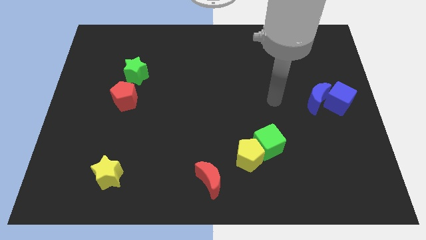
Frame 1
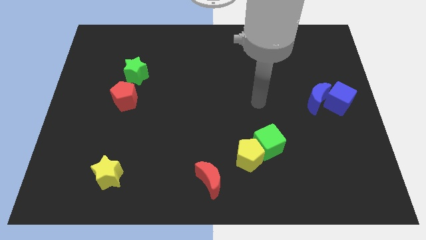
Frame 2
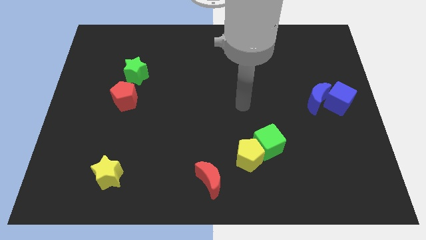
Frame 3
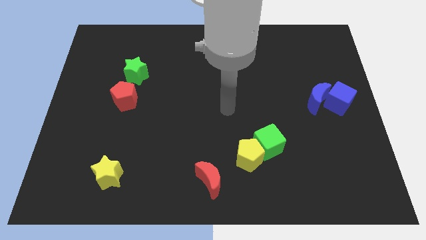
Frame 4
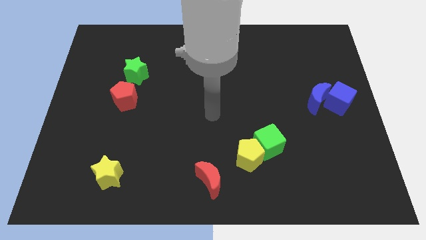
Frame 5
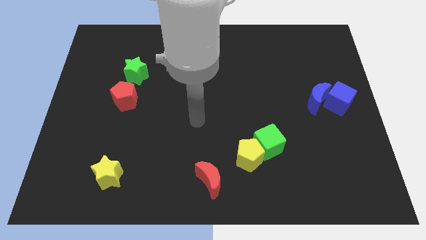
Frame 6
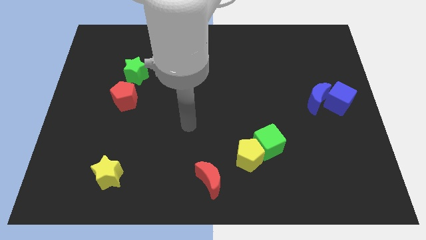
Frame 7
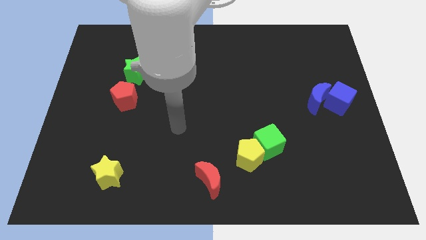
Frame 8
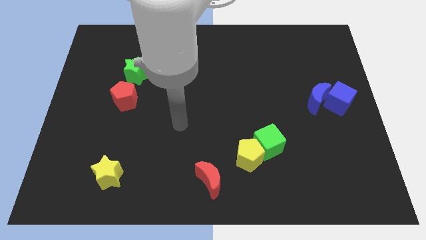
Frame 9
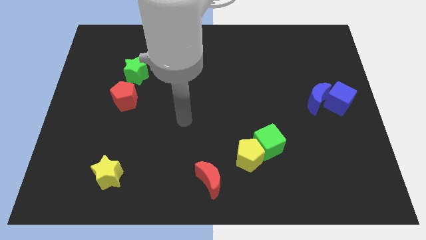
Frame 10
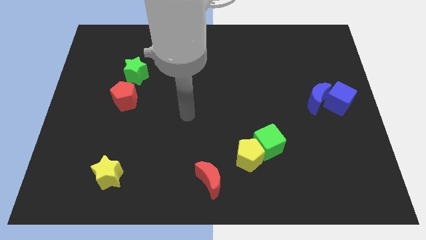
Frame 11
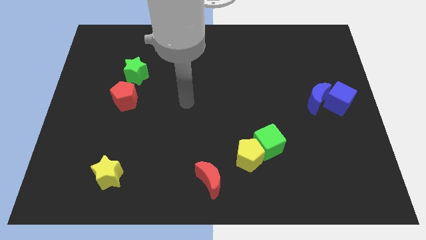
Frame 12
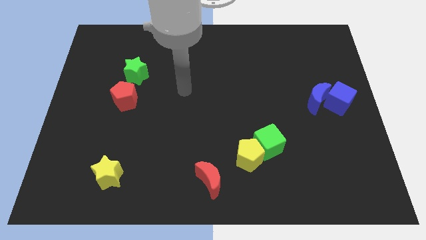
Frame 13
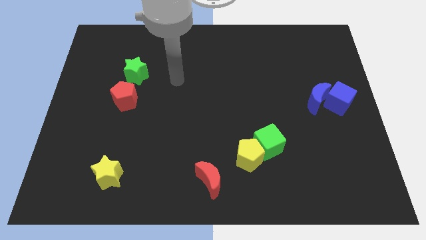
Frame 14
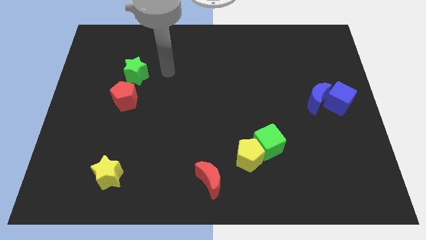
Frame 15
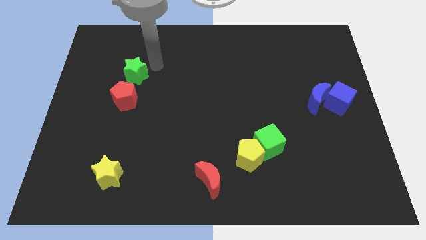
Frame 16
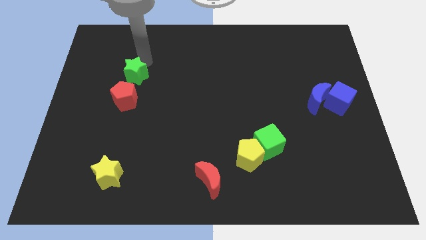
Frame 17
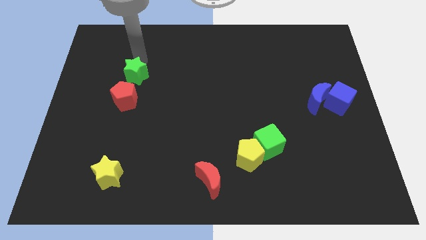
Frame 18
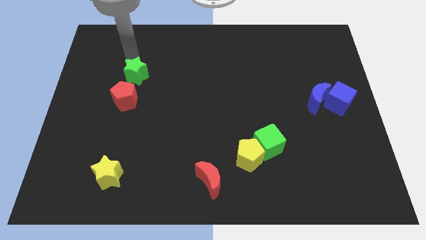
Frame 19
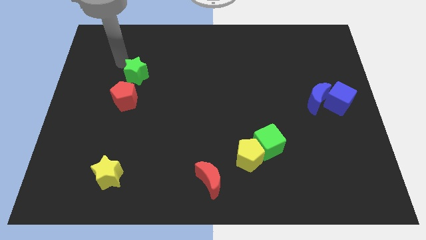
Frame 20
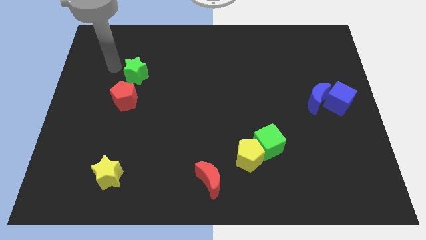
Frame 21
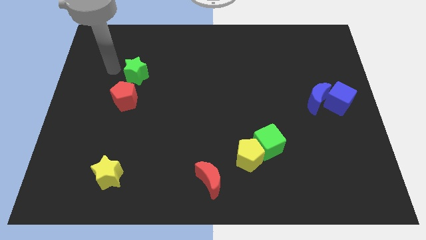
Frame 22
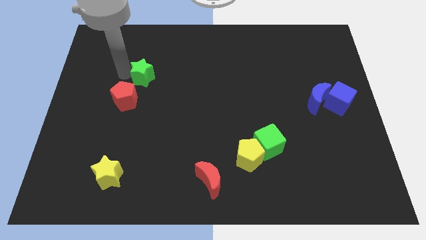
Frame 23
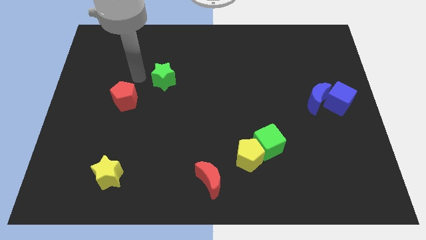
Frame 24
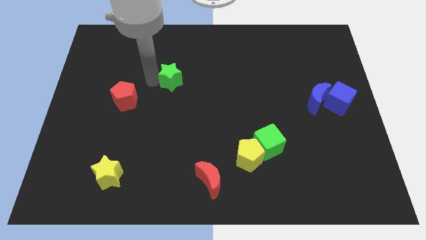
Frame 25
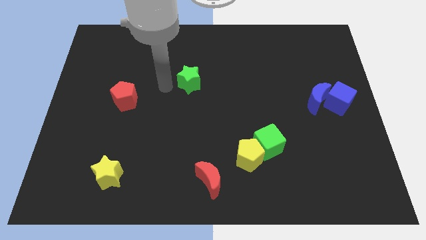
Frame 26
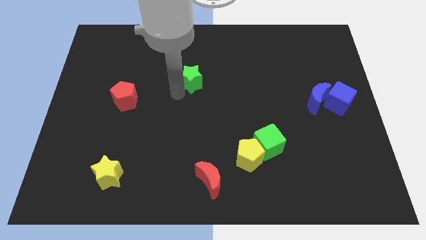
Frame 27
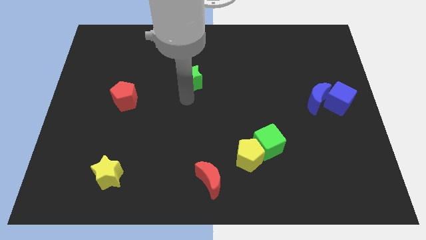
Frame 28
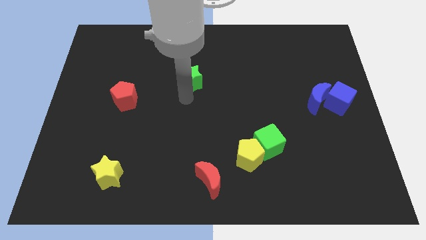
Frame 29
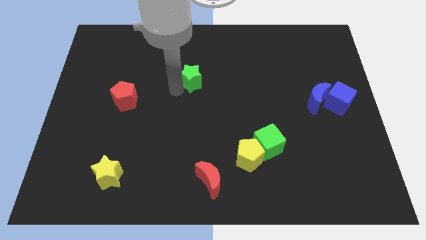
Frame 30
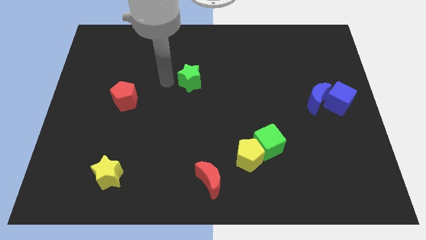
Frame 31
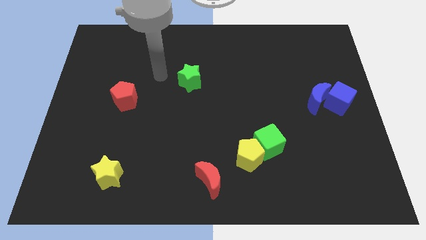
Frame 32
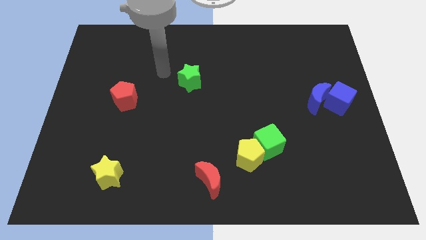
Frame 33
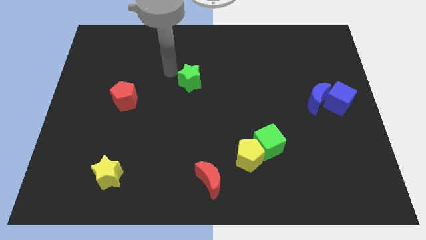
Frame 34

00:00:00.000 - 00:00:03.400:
separate green star from the red pentagon

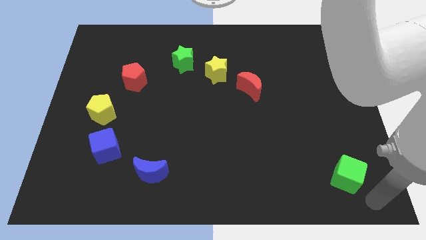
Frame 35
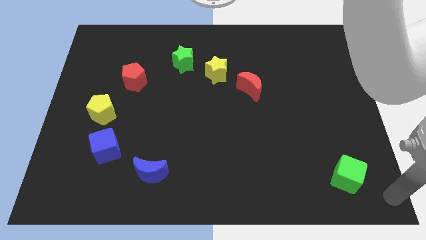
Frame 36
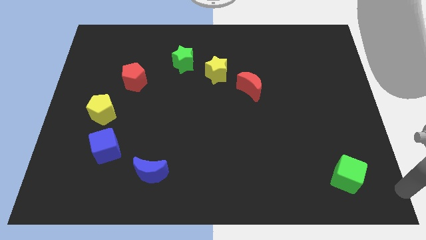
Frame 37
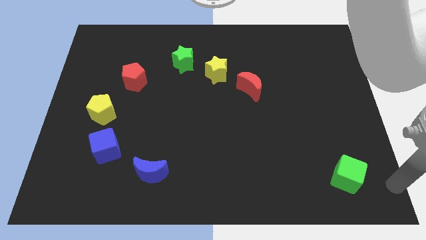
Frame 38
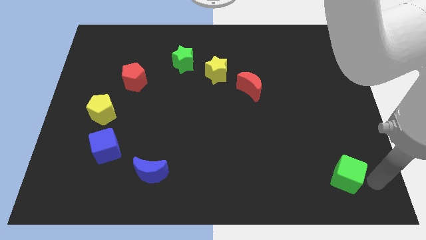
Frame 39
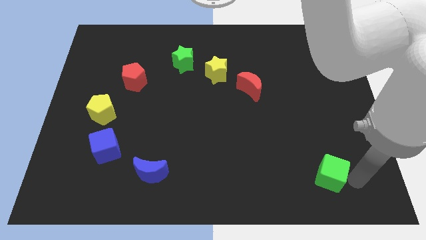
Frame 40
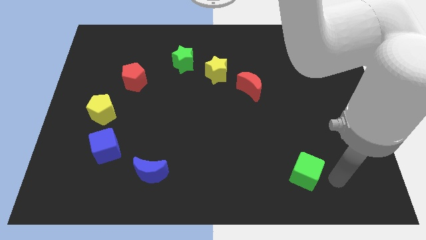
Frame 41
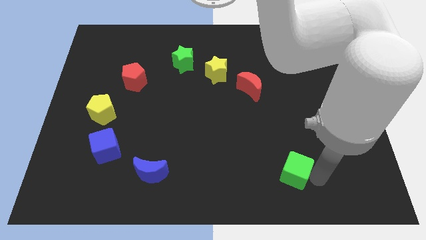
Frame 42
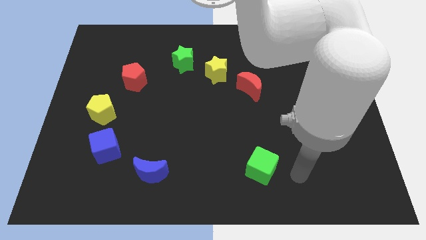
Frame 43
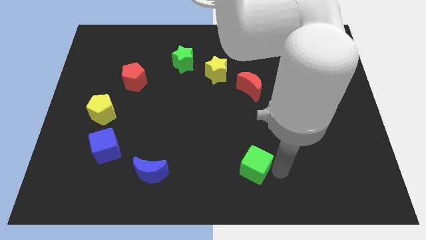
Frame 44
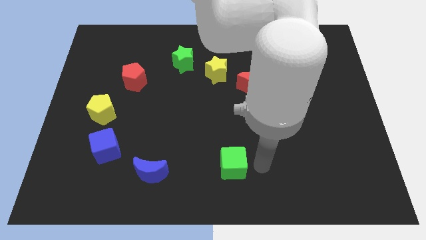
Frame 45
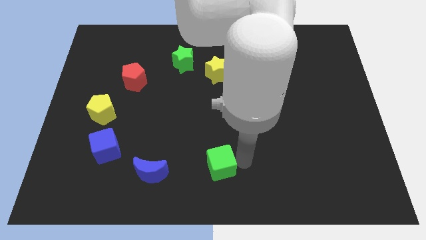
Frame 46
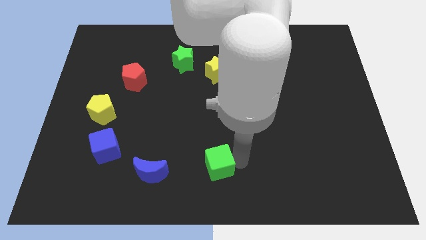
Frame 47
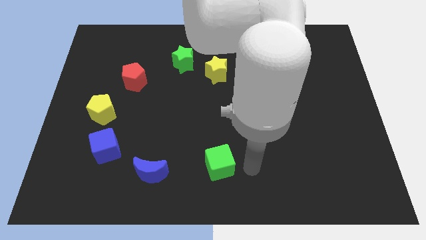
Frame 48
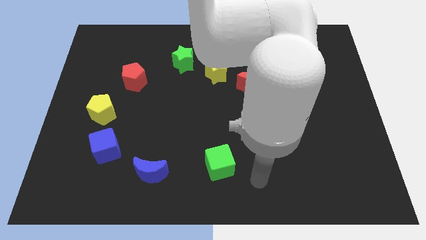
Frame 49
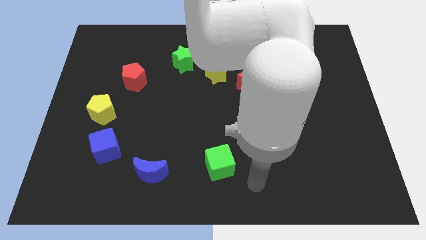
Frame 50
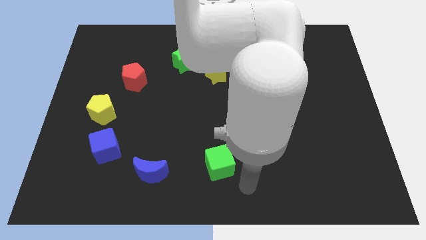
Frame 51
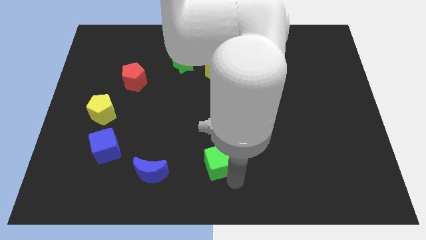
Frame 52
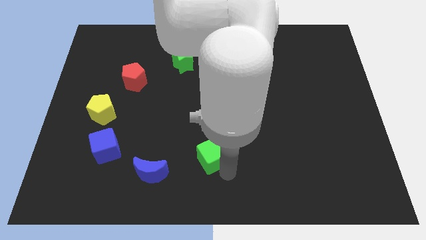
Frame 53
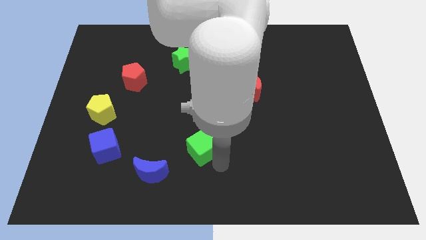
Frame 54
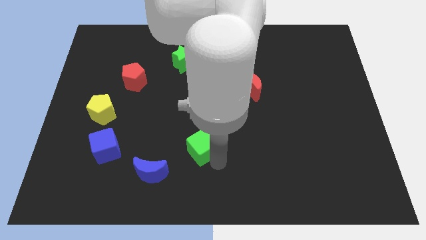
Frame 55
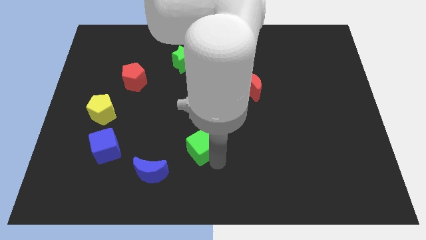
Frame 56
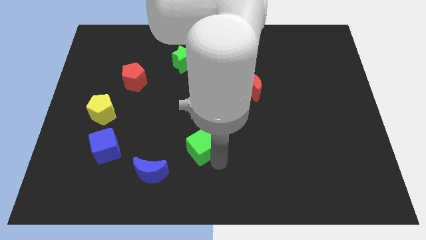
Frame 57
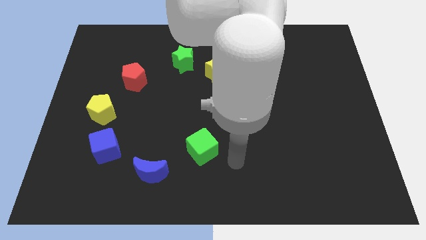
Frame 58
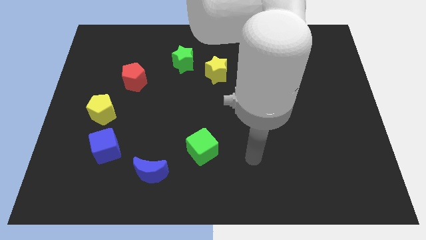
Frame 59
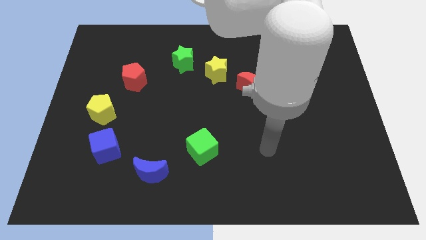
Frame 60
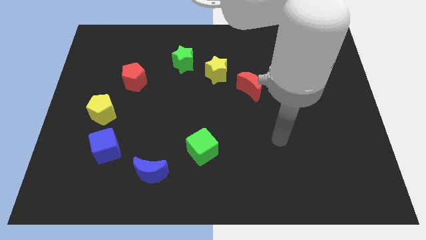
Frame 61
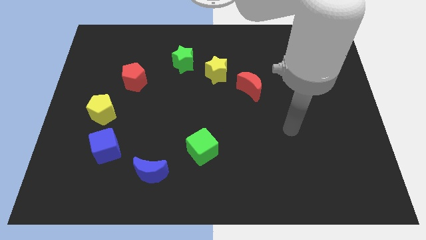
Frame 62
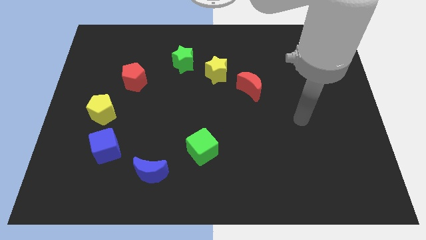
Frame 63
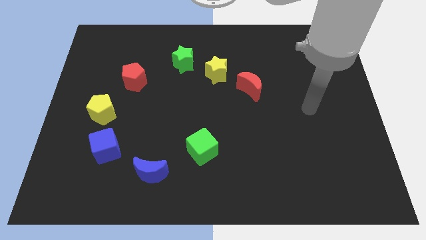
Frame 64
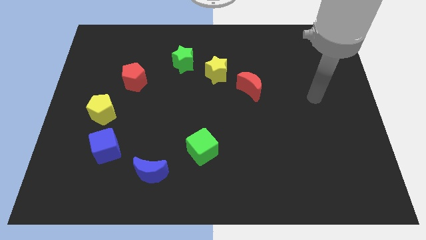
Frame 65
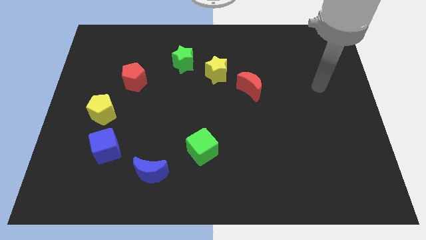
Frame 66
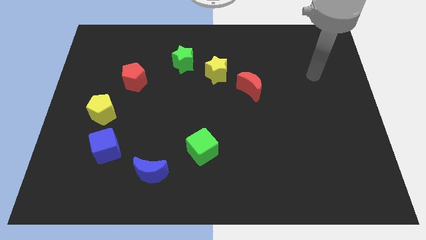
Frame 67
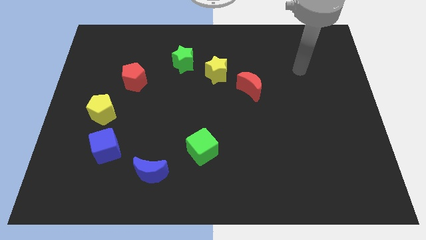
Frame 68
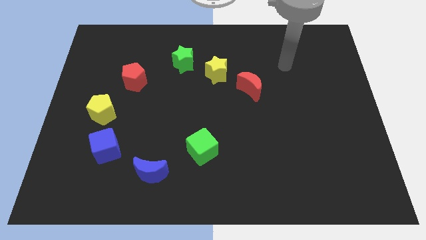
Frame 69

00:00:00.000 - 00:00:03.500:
move green cube vertical to yellow star

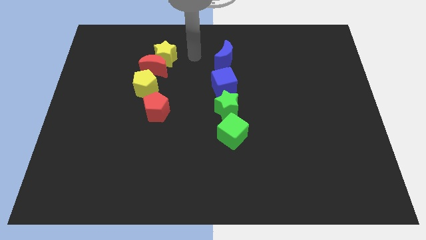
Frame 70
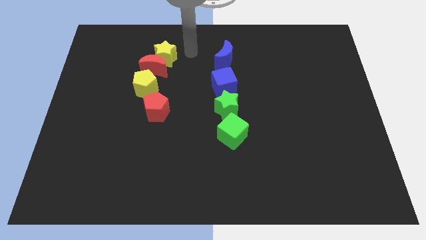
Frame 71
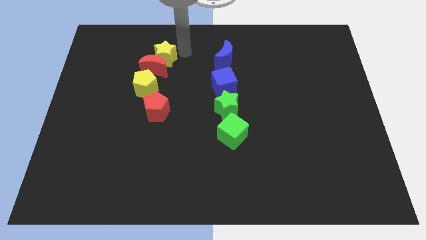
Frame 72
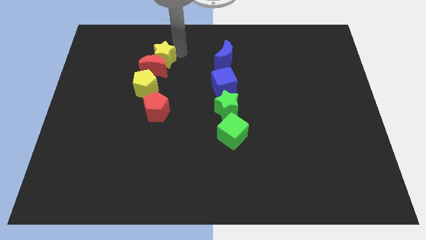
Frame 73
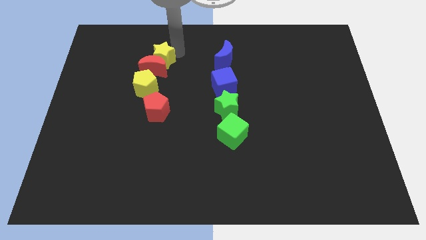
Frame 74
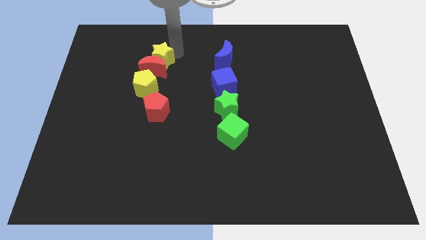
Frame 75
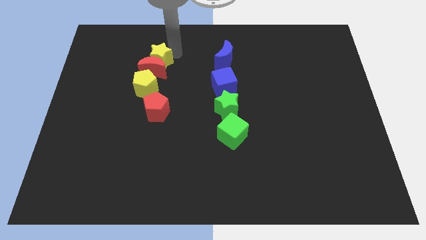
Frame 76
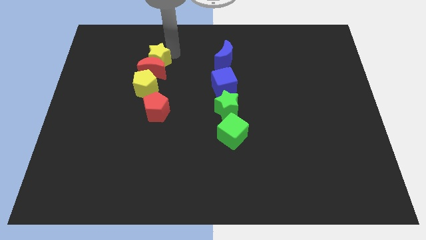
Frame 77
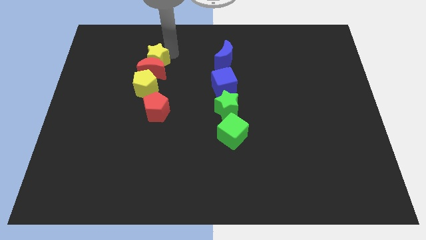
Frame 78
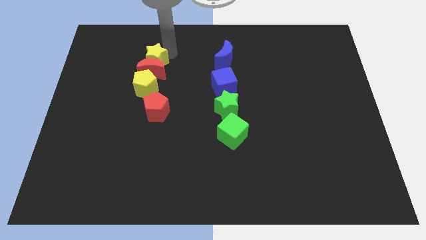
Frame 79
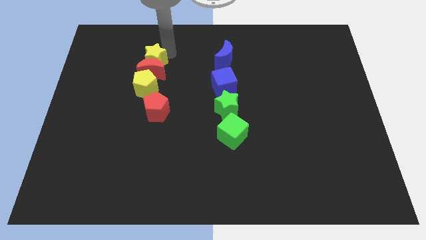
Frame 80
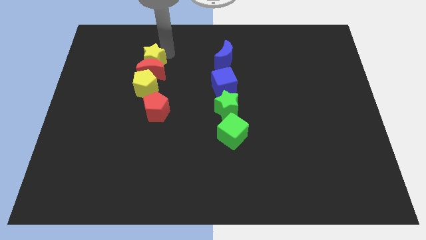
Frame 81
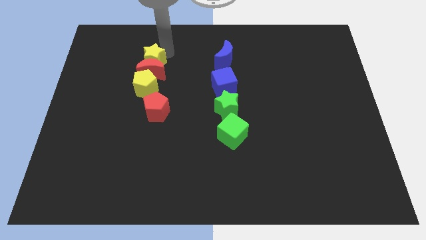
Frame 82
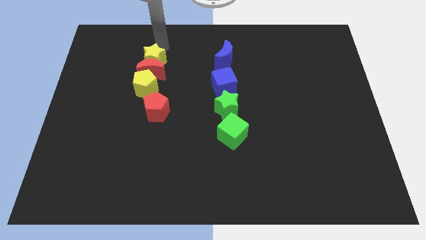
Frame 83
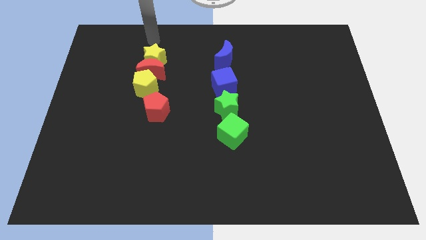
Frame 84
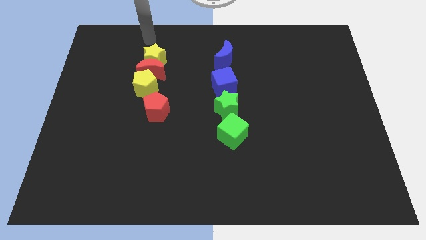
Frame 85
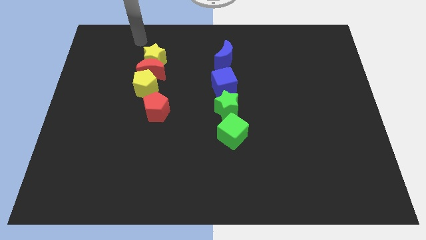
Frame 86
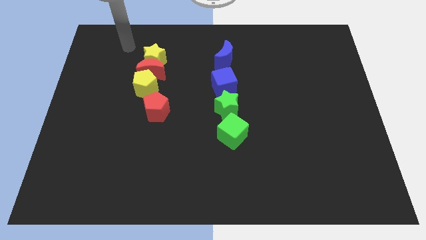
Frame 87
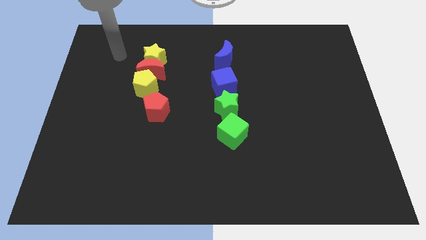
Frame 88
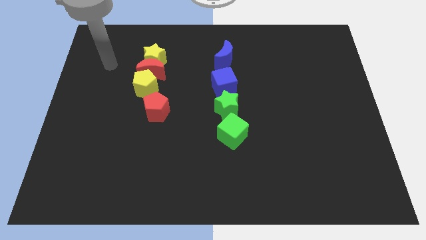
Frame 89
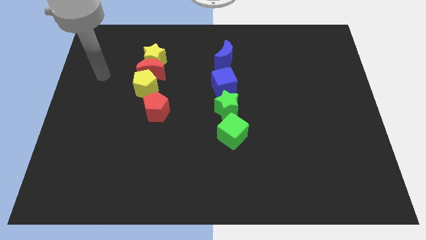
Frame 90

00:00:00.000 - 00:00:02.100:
push the yellow star into the red crescent
